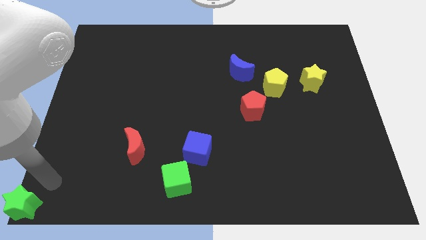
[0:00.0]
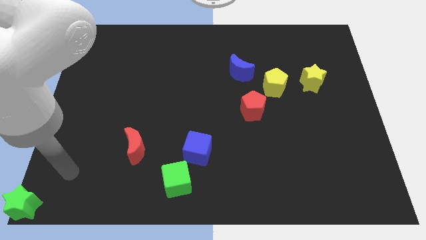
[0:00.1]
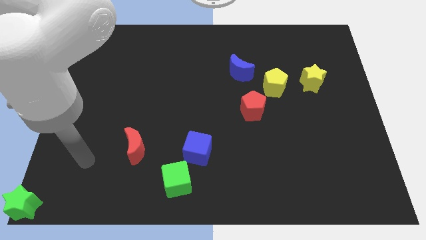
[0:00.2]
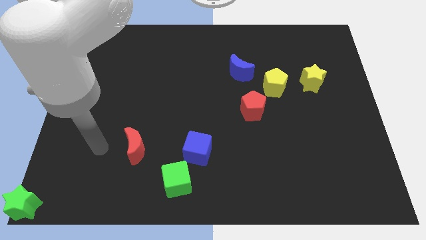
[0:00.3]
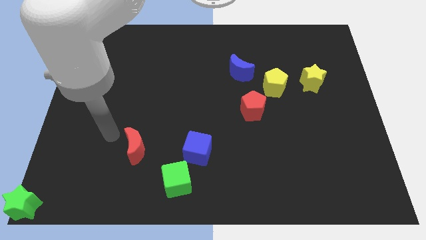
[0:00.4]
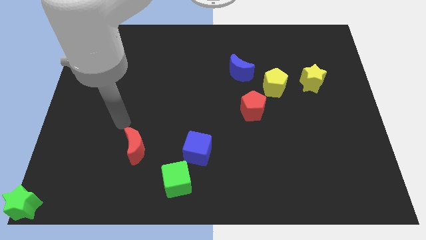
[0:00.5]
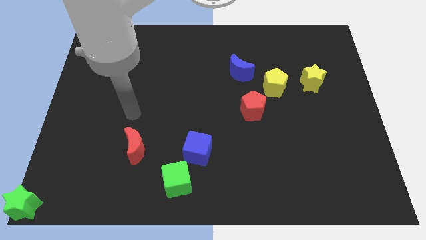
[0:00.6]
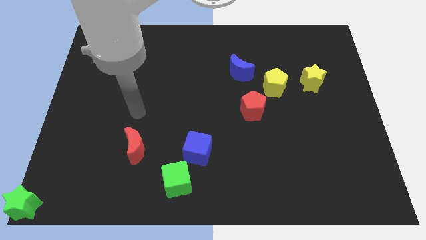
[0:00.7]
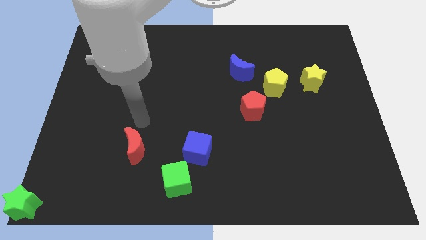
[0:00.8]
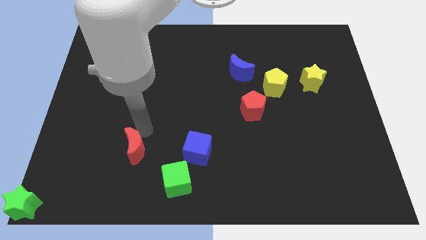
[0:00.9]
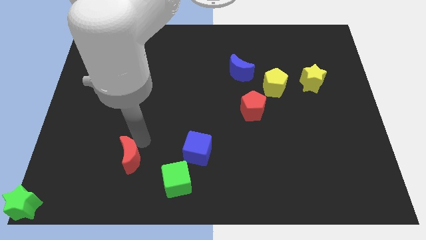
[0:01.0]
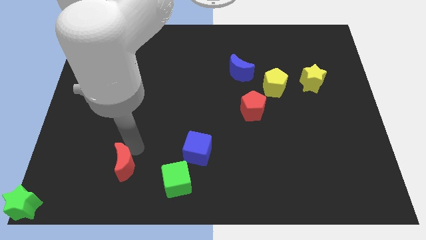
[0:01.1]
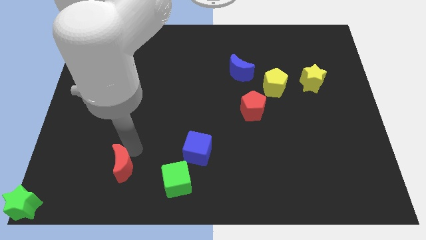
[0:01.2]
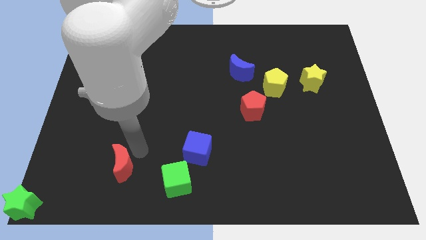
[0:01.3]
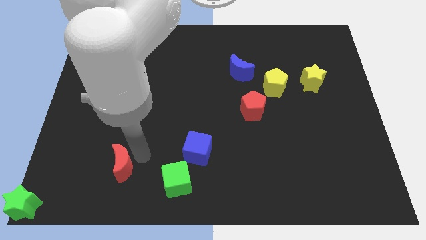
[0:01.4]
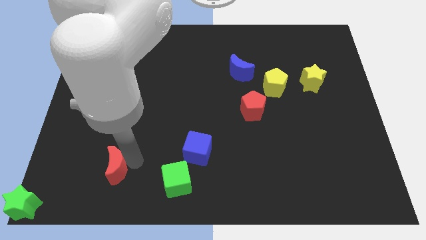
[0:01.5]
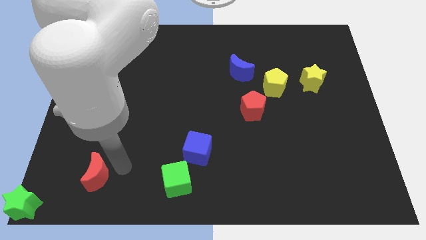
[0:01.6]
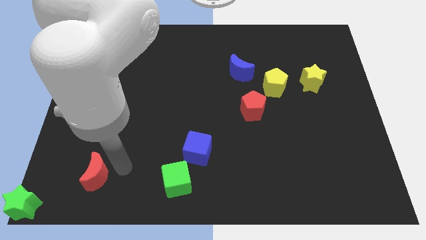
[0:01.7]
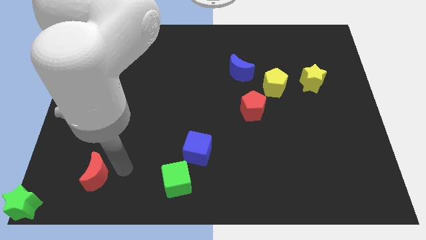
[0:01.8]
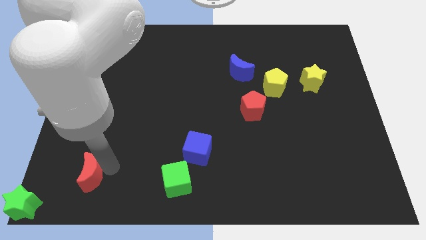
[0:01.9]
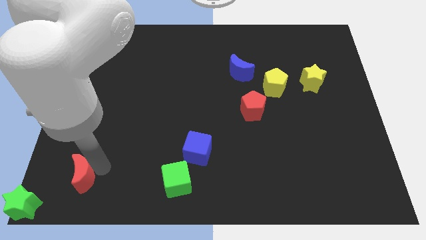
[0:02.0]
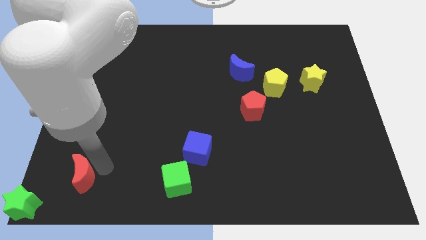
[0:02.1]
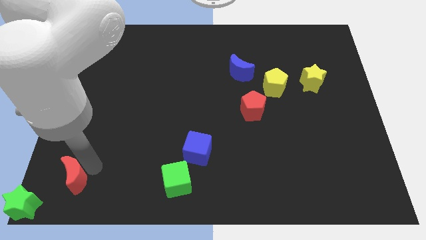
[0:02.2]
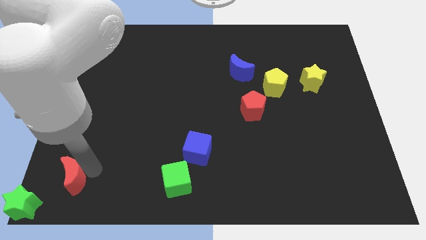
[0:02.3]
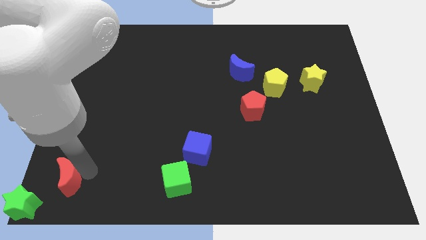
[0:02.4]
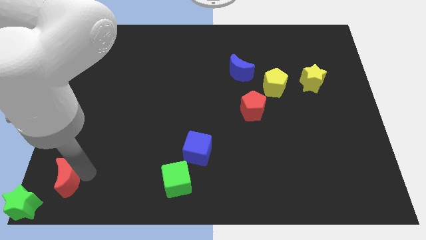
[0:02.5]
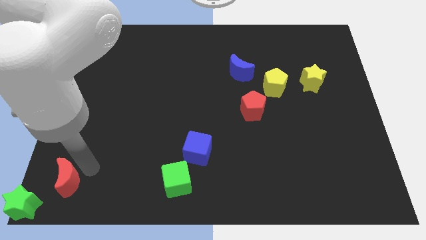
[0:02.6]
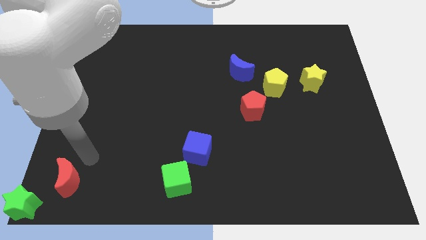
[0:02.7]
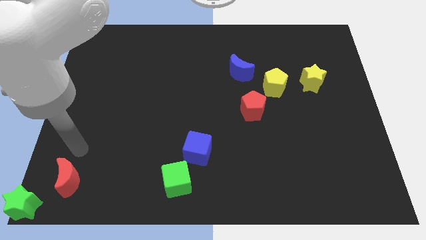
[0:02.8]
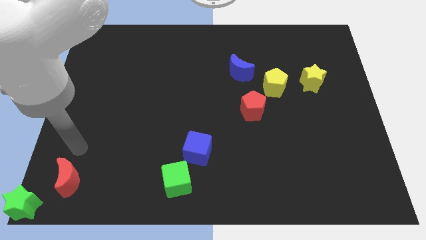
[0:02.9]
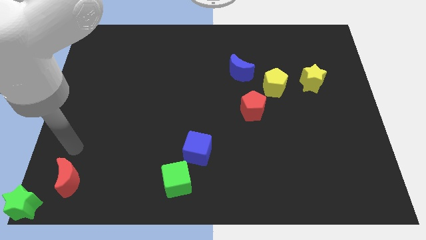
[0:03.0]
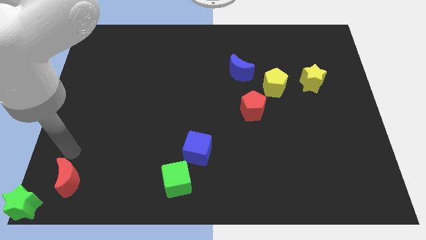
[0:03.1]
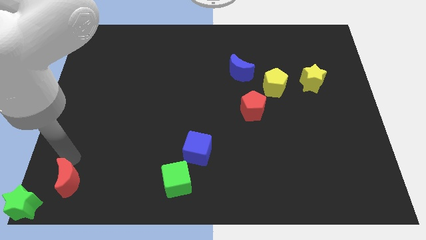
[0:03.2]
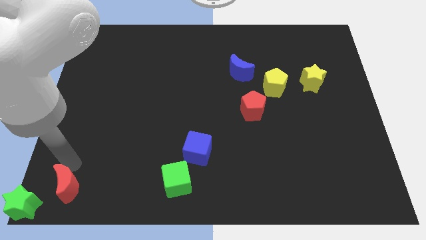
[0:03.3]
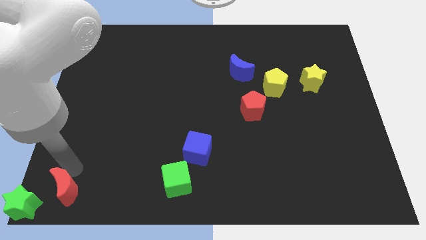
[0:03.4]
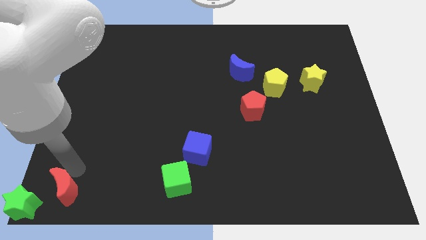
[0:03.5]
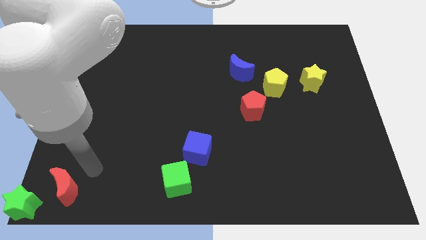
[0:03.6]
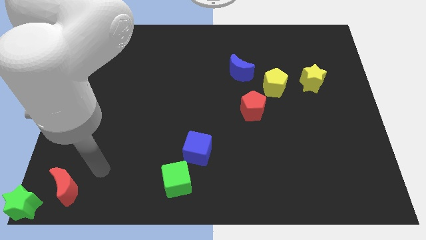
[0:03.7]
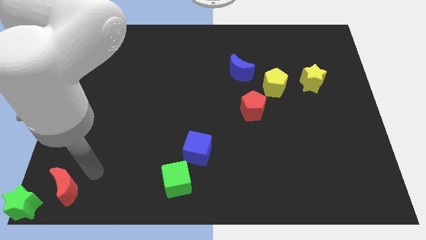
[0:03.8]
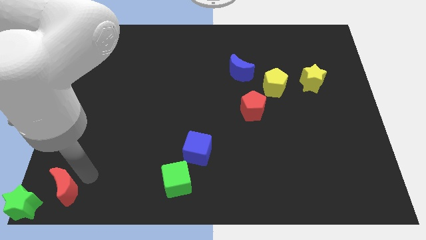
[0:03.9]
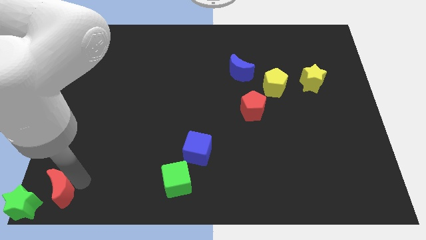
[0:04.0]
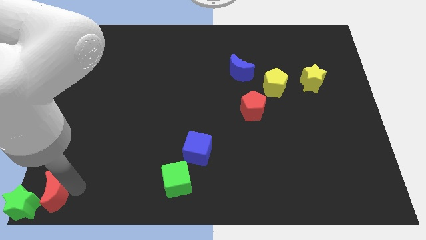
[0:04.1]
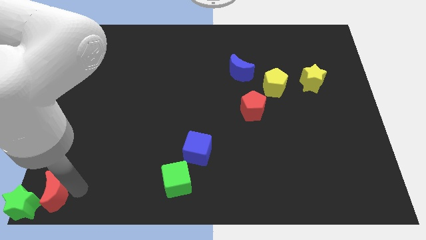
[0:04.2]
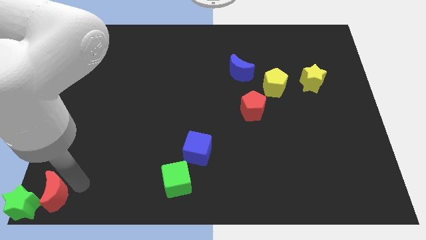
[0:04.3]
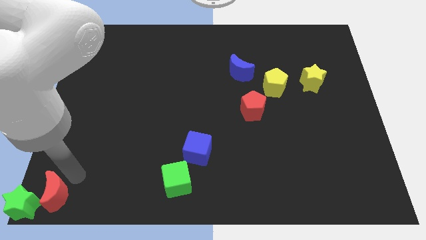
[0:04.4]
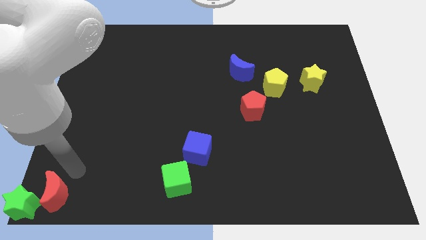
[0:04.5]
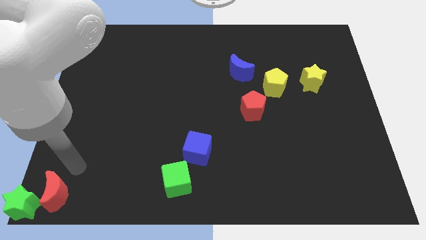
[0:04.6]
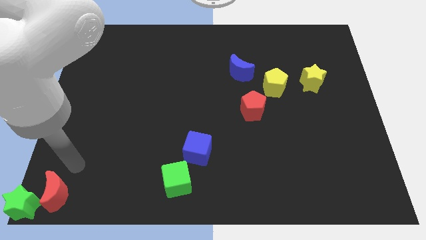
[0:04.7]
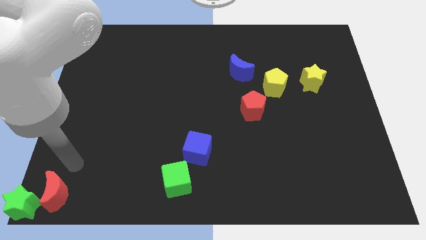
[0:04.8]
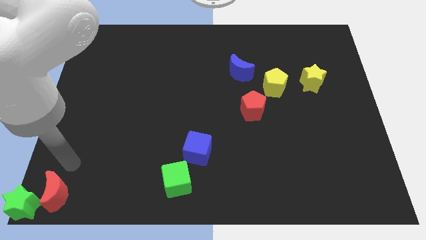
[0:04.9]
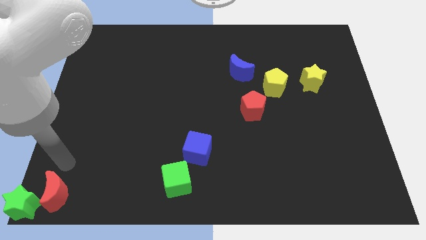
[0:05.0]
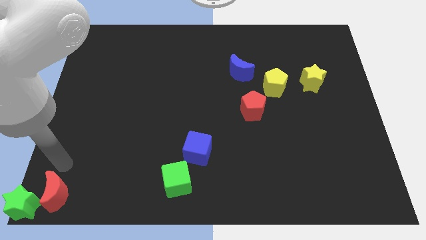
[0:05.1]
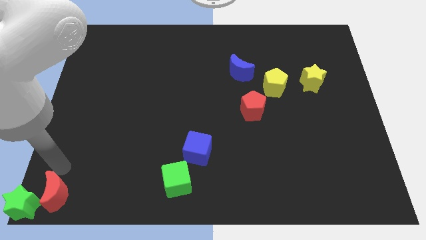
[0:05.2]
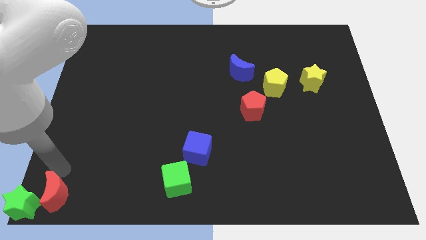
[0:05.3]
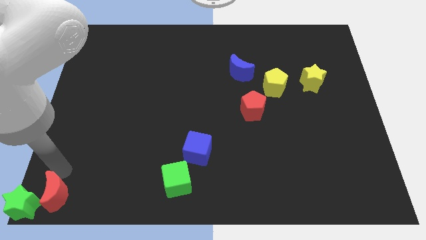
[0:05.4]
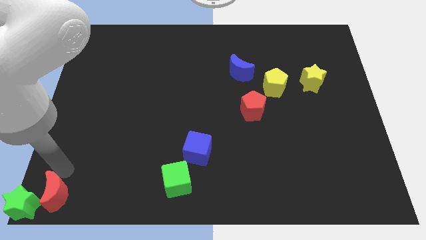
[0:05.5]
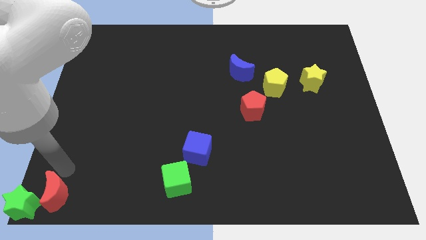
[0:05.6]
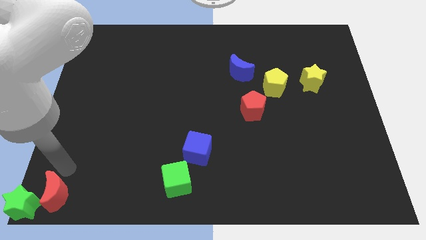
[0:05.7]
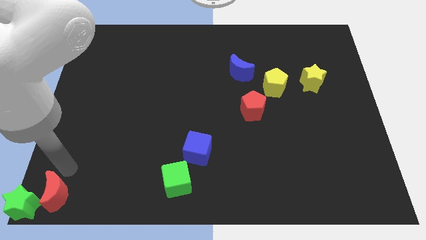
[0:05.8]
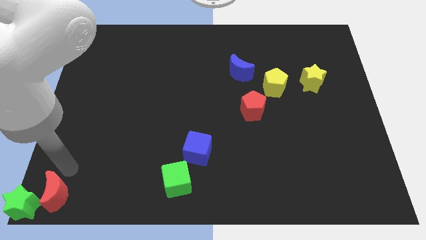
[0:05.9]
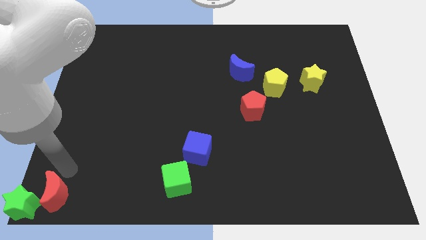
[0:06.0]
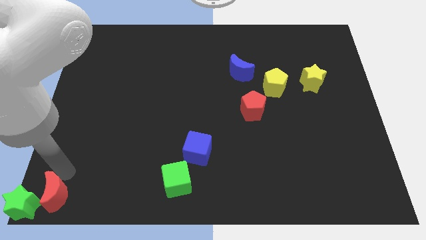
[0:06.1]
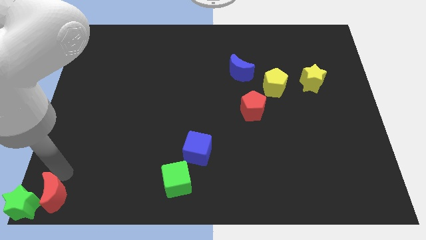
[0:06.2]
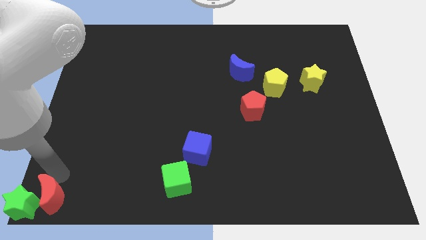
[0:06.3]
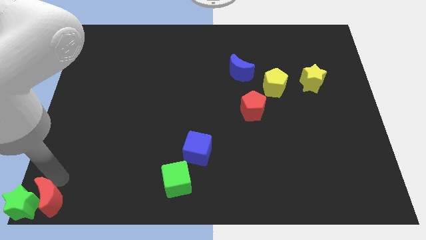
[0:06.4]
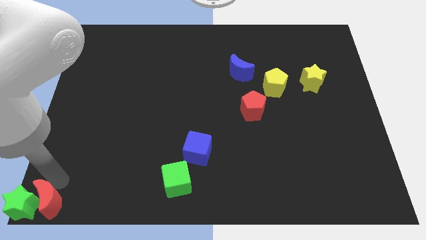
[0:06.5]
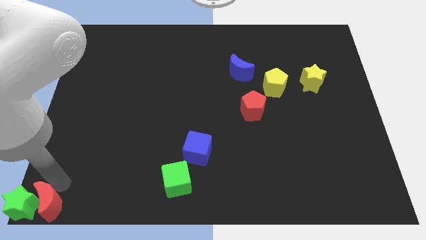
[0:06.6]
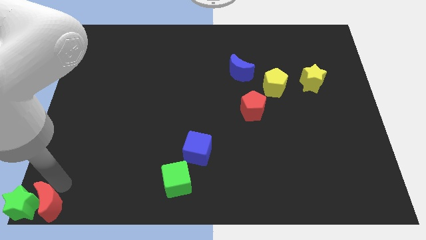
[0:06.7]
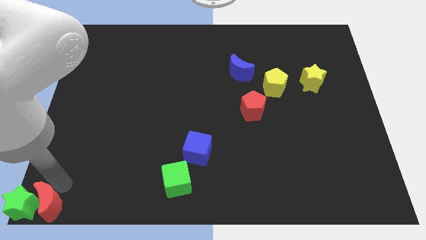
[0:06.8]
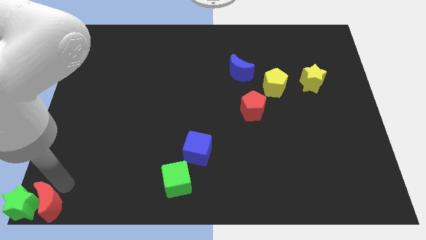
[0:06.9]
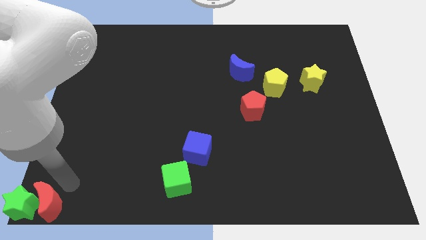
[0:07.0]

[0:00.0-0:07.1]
push the red crescent to the right of the green star

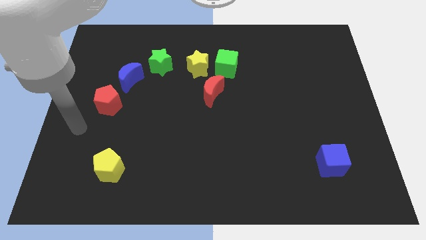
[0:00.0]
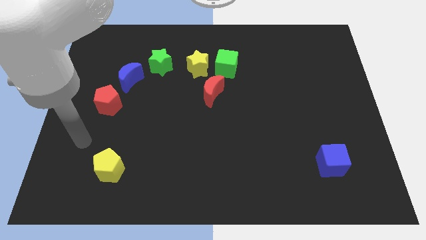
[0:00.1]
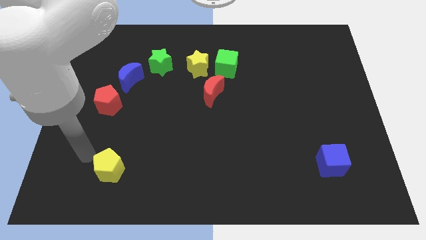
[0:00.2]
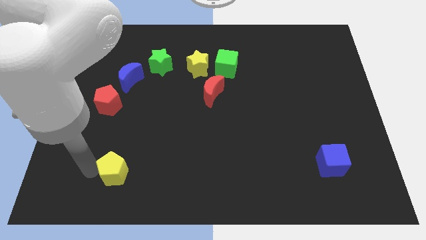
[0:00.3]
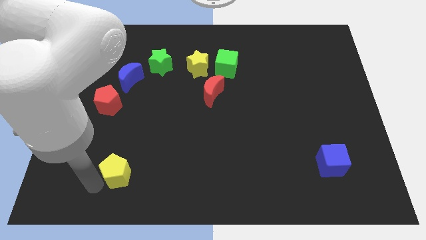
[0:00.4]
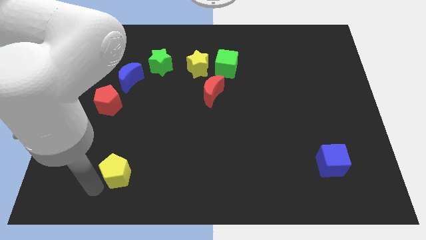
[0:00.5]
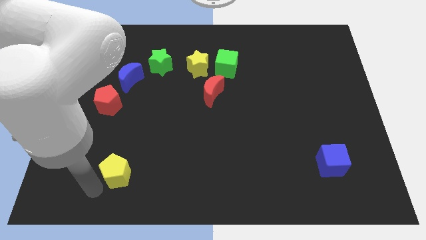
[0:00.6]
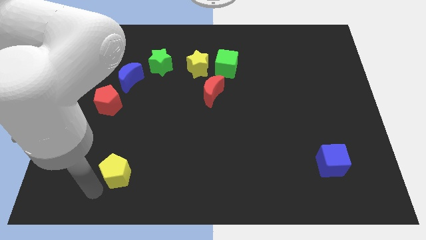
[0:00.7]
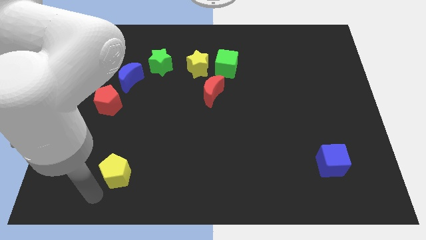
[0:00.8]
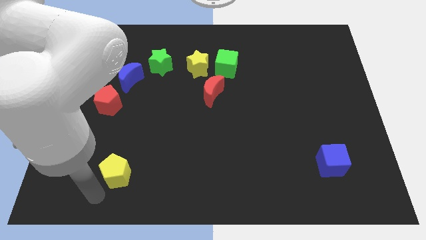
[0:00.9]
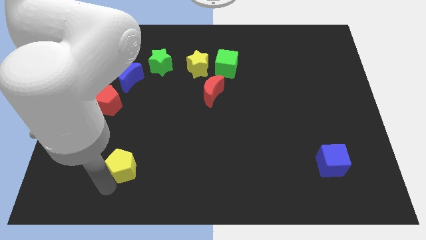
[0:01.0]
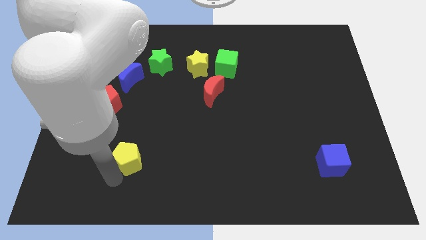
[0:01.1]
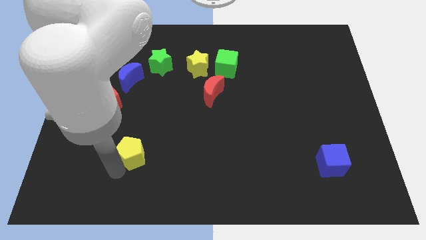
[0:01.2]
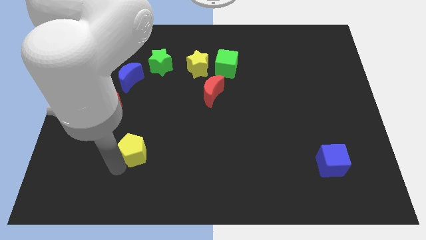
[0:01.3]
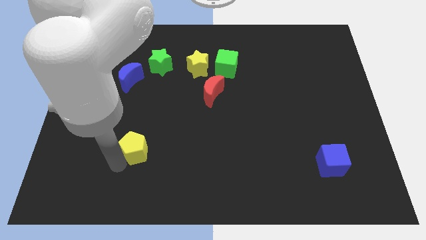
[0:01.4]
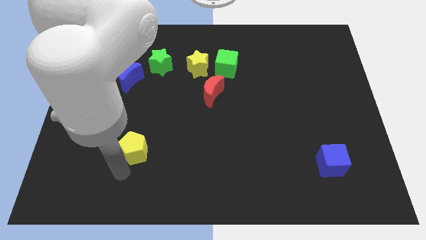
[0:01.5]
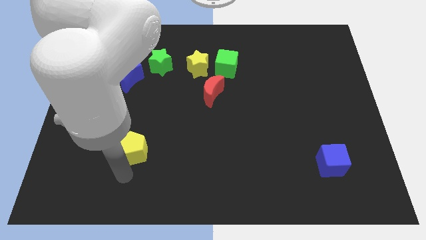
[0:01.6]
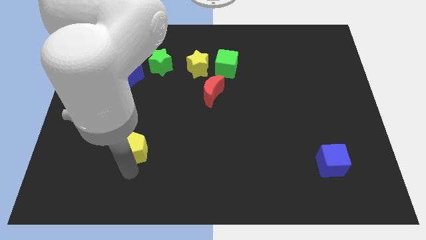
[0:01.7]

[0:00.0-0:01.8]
place the yellow pentagon diagonal to the red pentagon
